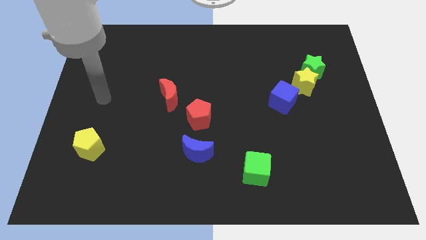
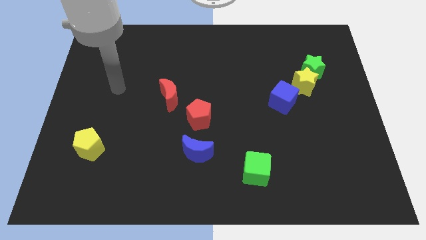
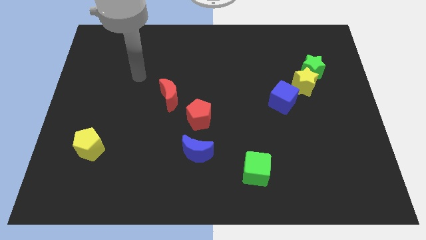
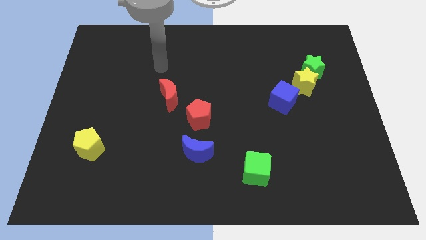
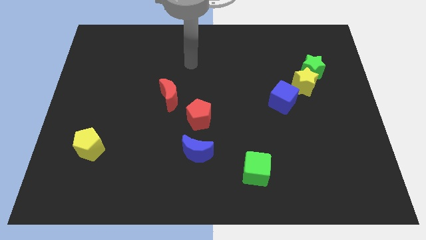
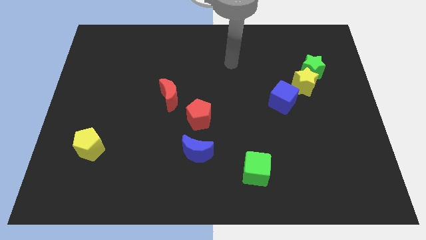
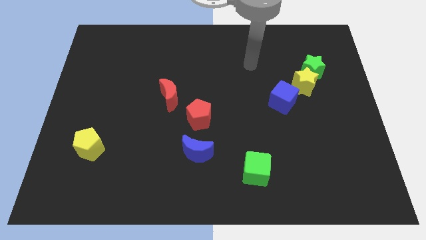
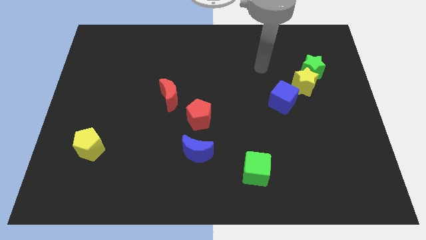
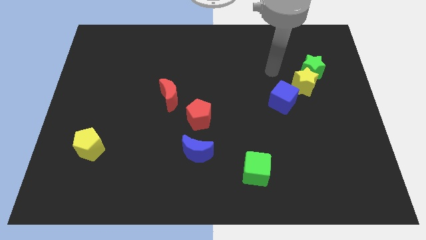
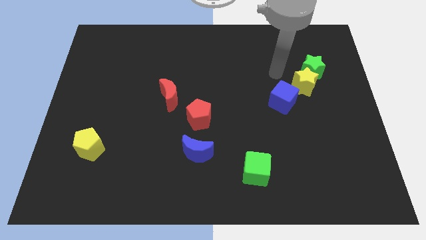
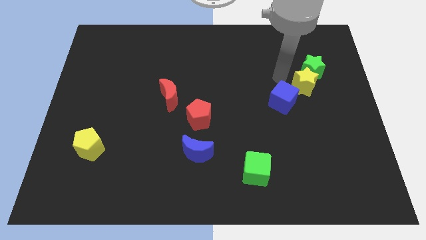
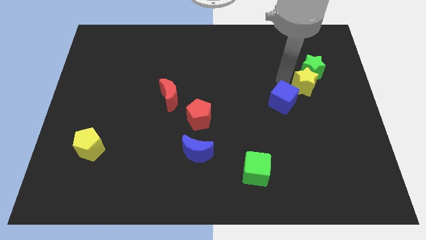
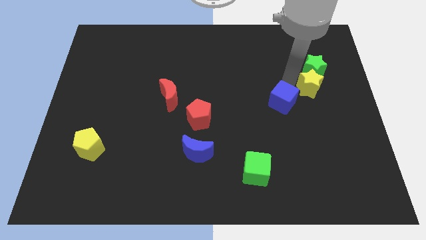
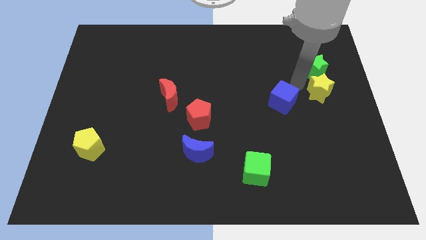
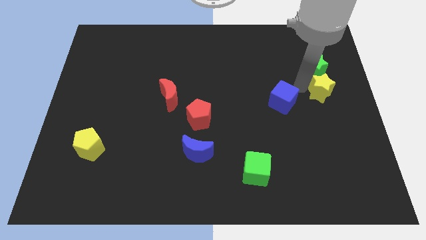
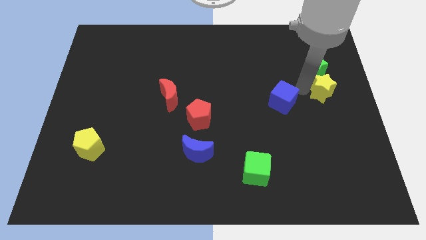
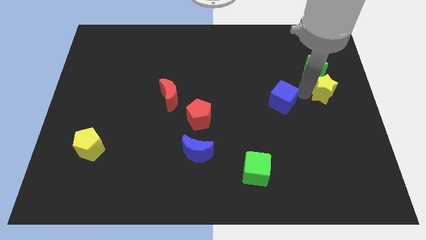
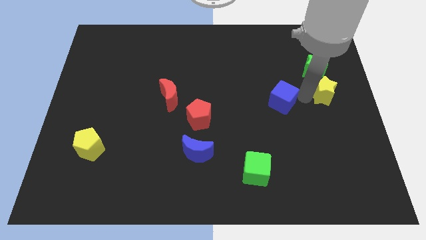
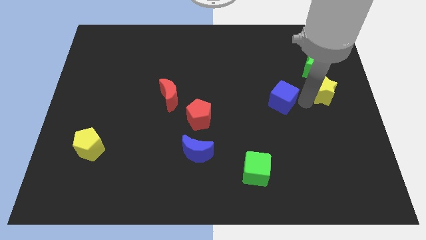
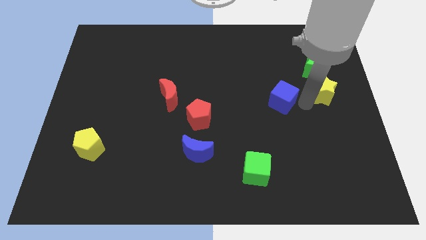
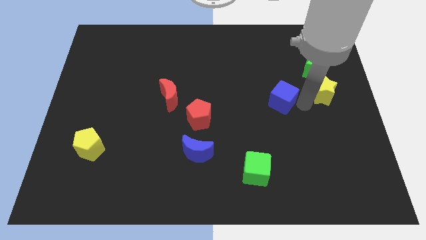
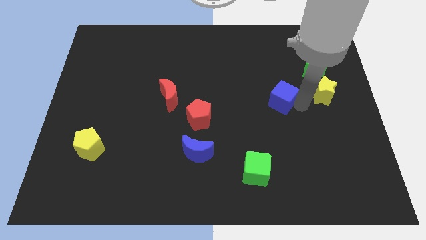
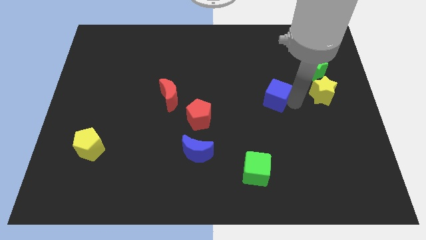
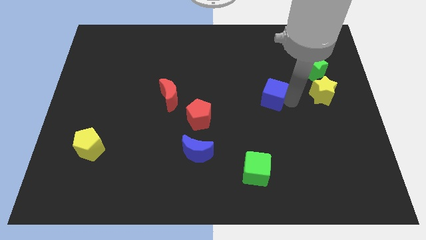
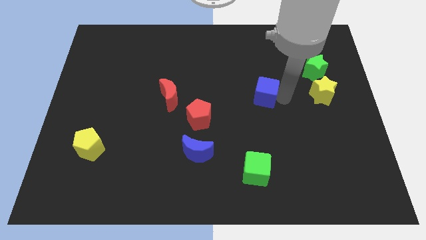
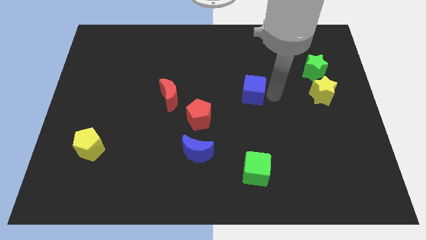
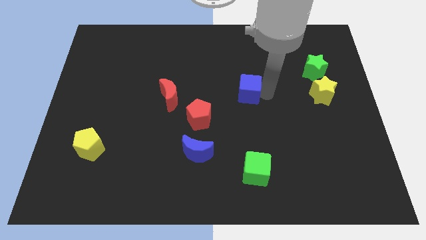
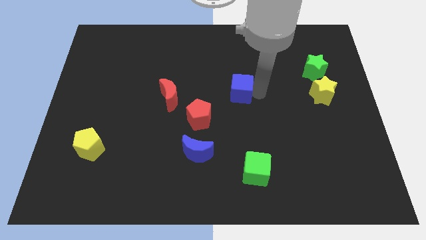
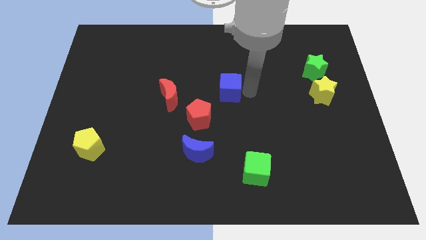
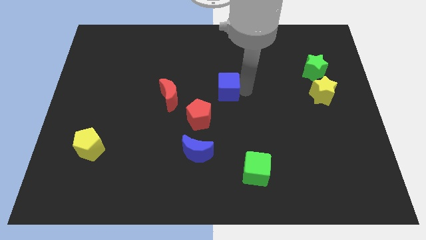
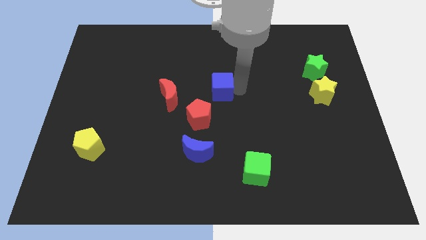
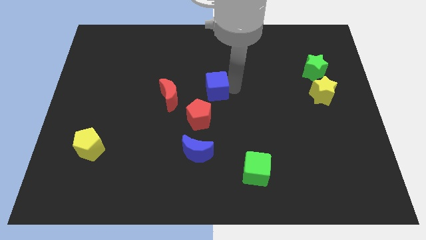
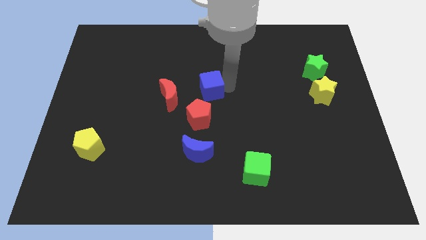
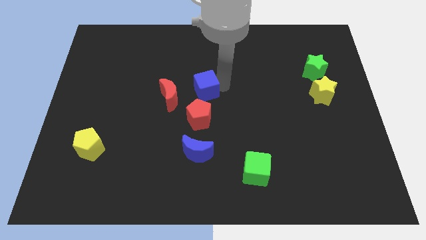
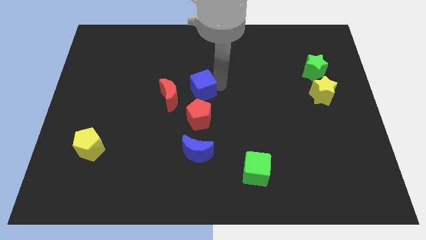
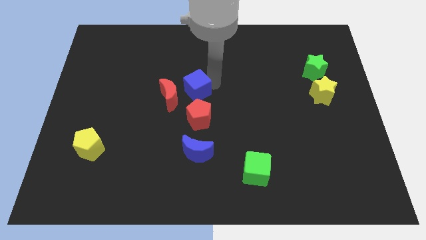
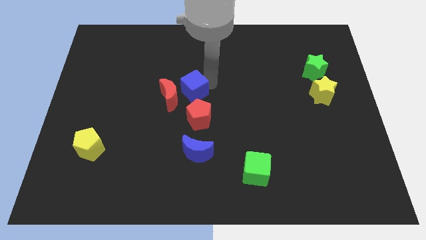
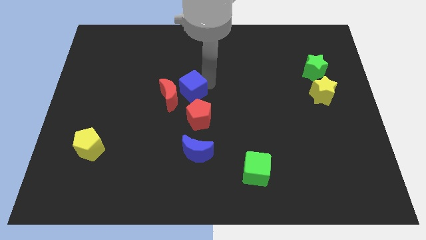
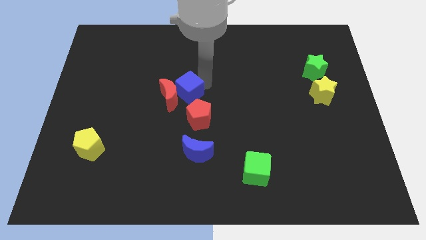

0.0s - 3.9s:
move the blue cube close to the red moon

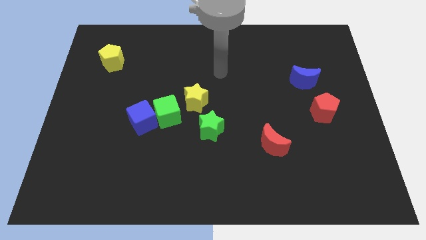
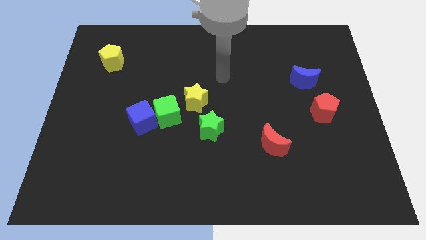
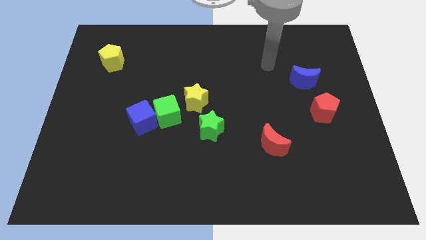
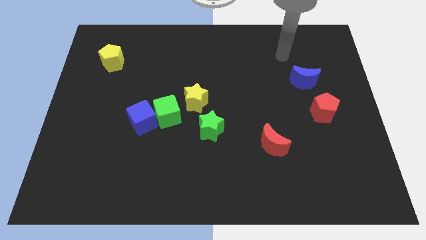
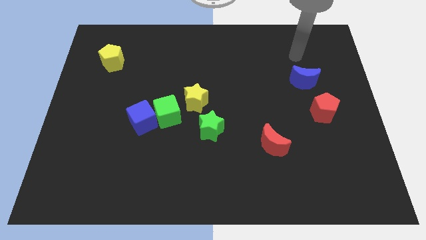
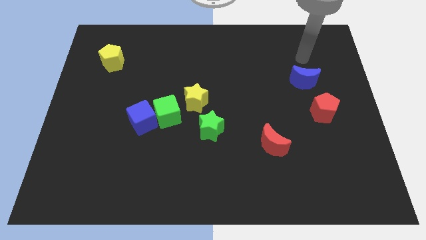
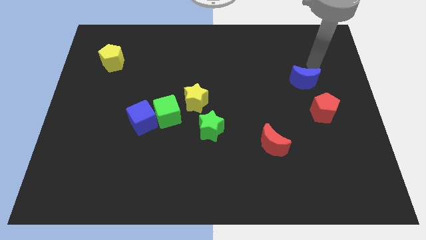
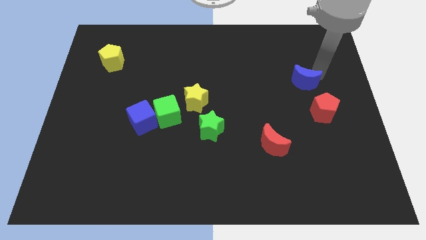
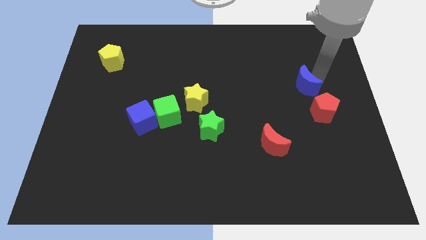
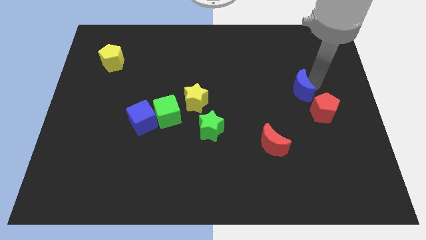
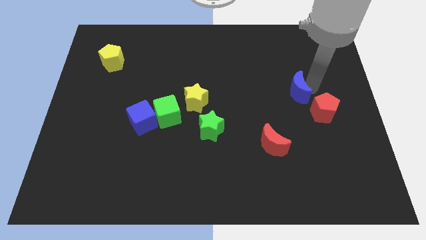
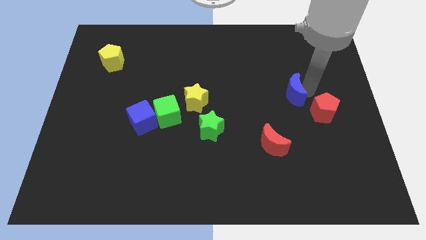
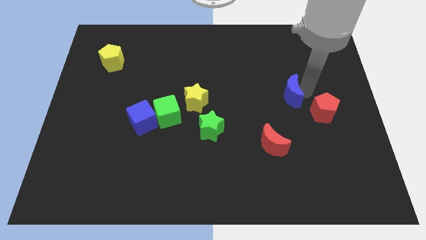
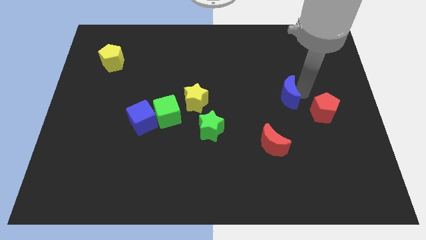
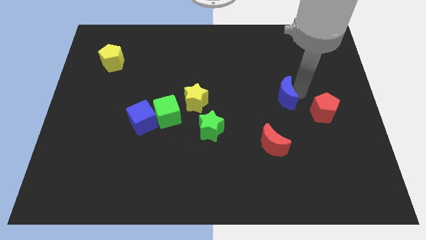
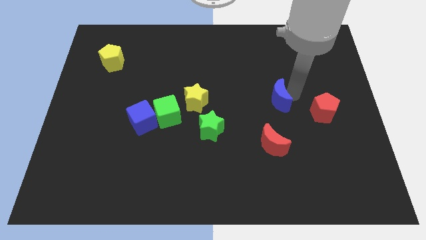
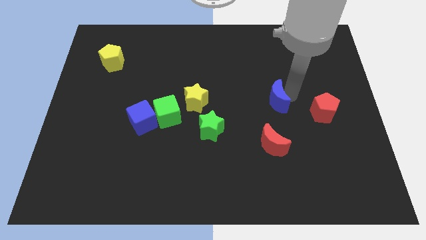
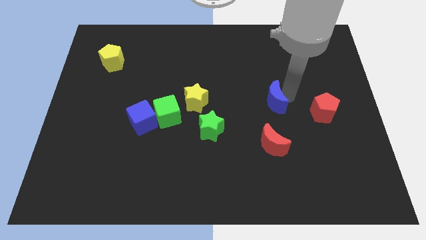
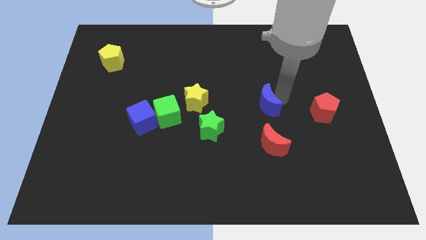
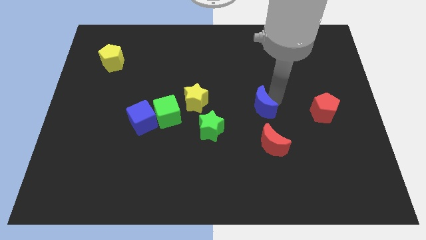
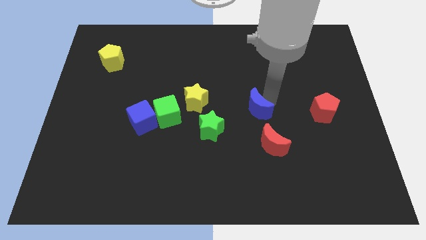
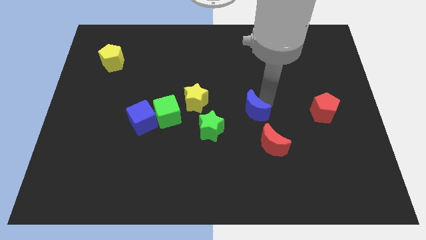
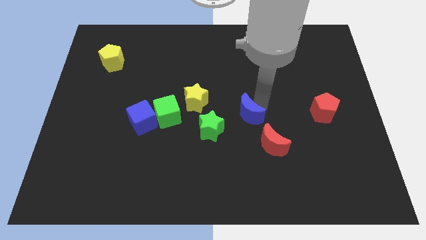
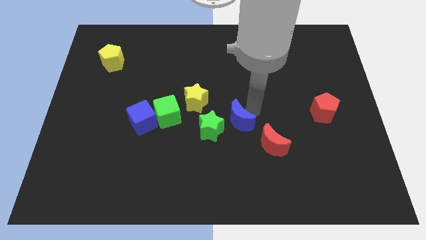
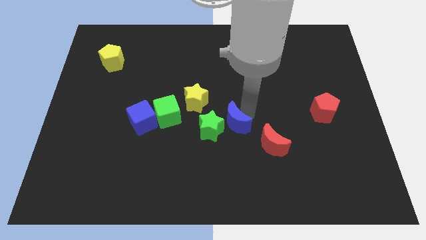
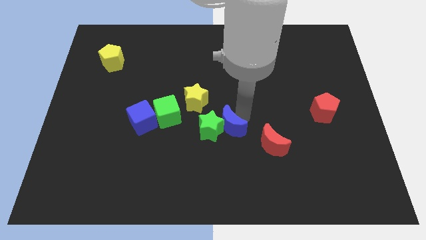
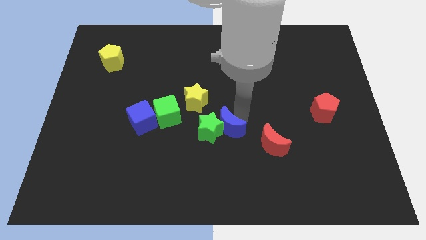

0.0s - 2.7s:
slide the blue moon close to the green star

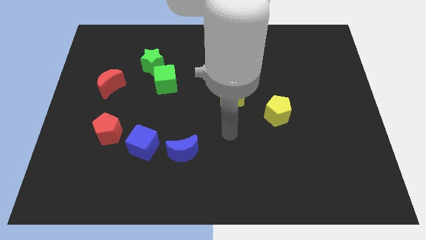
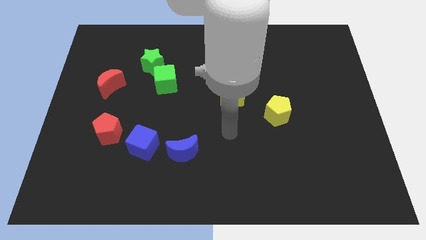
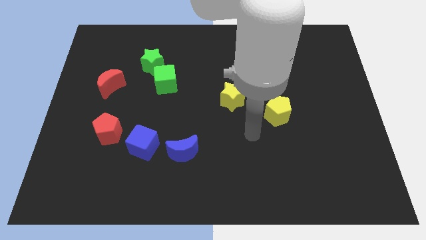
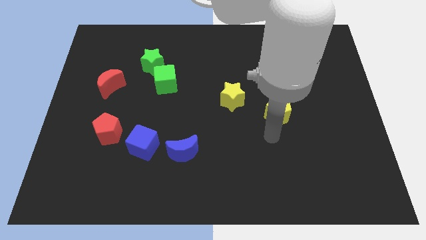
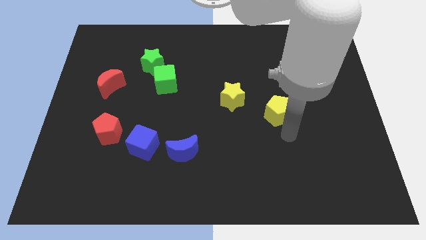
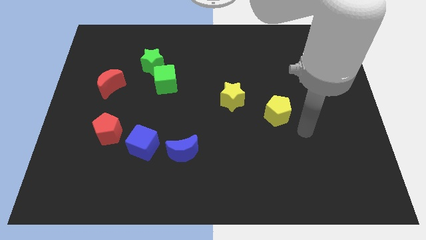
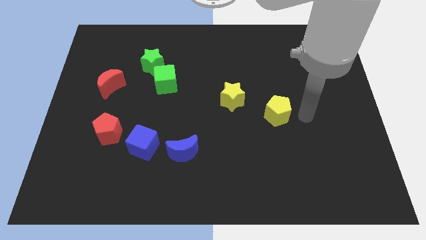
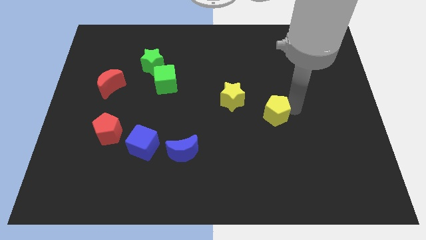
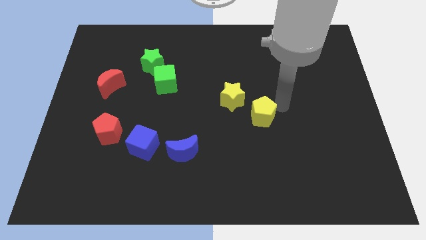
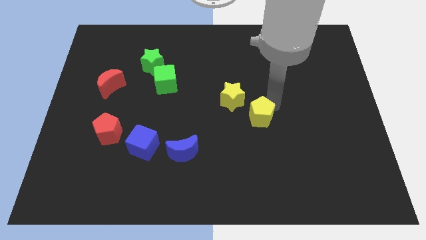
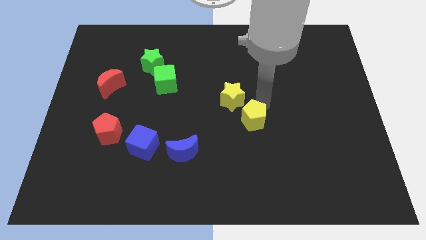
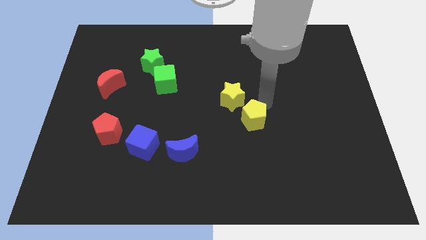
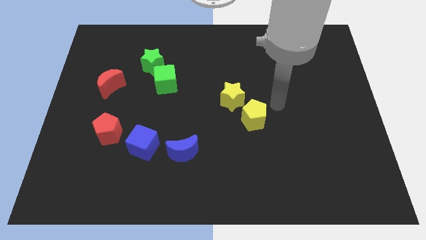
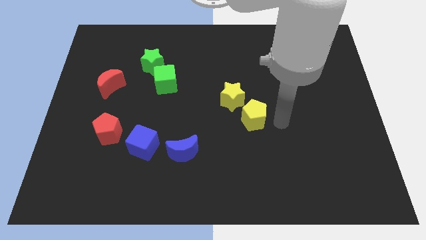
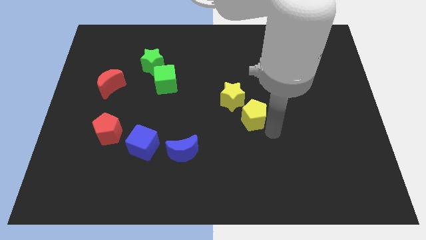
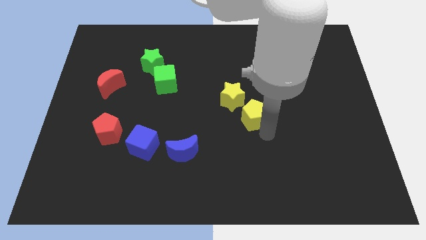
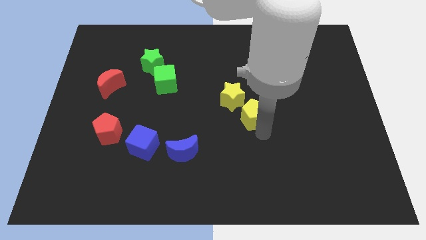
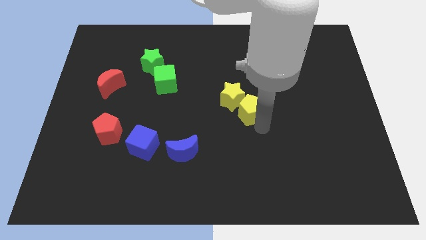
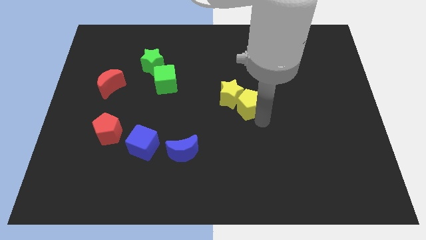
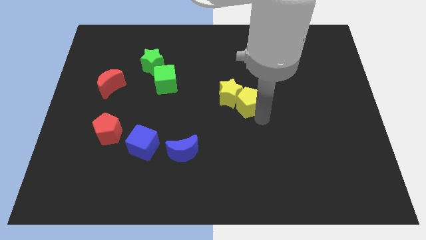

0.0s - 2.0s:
push the yellow pentagon towards the yellow star
